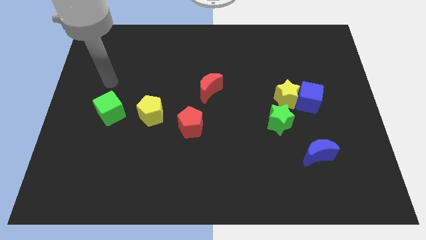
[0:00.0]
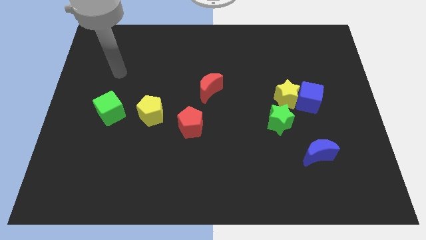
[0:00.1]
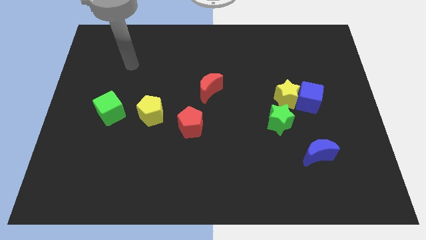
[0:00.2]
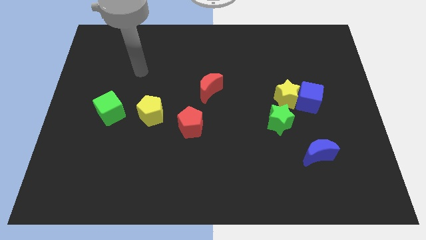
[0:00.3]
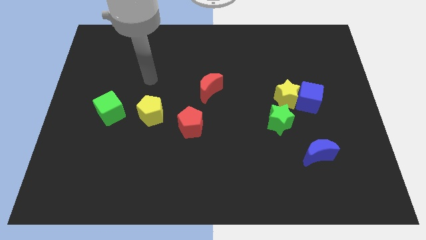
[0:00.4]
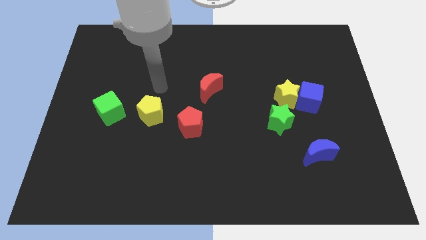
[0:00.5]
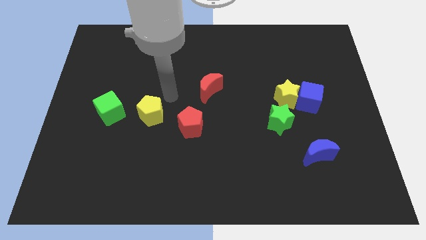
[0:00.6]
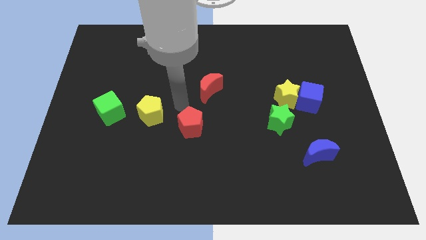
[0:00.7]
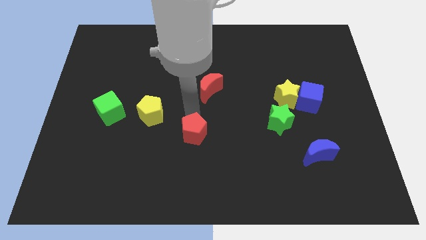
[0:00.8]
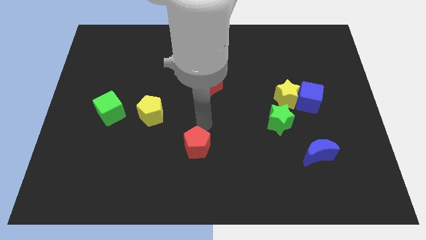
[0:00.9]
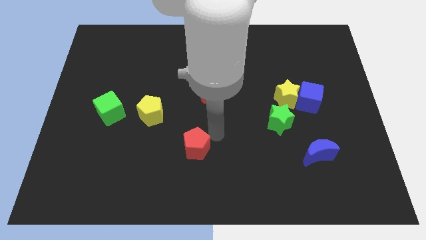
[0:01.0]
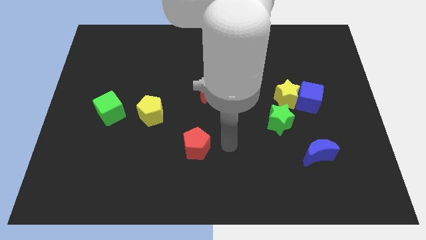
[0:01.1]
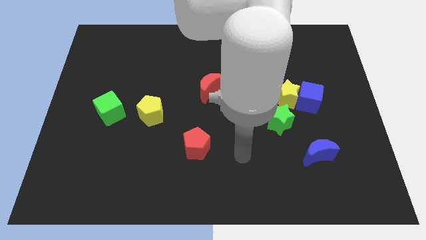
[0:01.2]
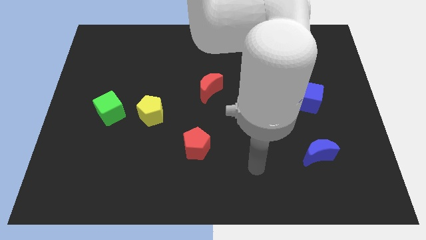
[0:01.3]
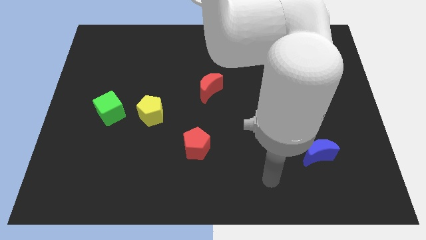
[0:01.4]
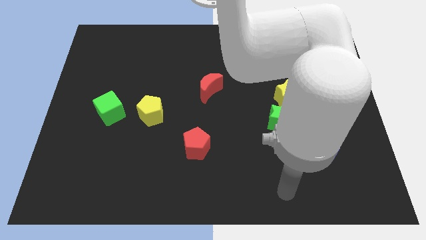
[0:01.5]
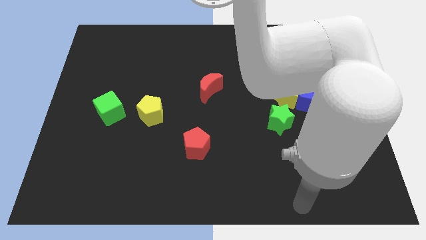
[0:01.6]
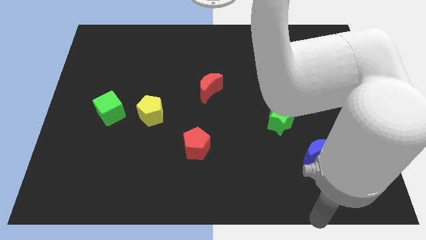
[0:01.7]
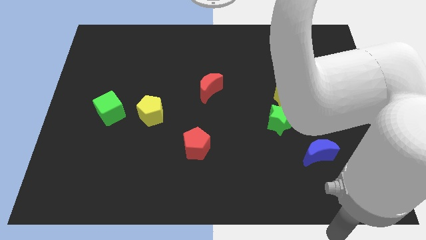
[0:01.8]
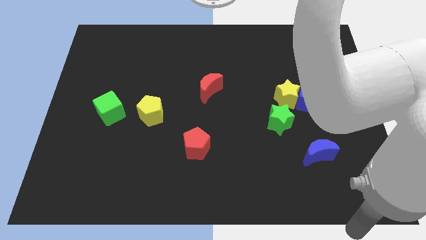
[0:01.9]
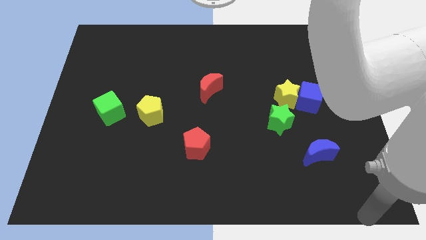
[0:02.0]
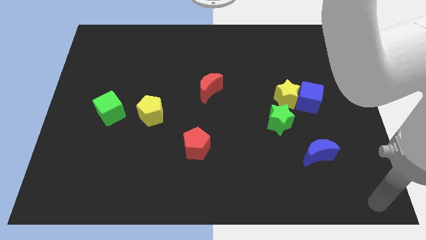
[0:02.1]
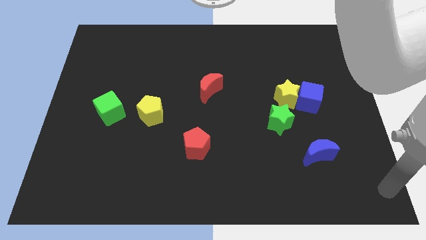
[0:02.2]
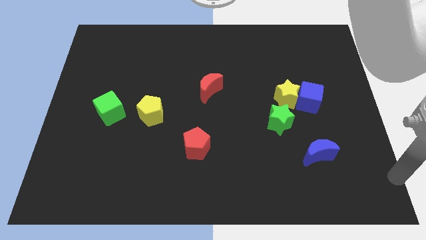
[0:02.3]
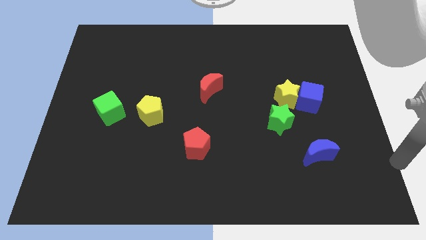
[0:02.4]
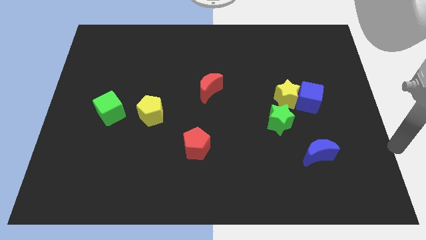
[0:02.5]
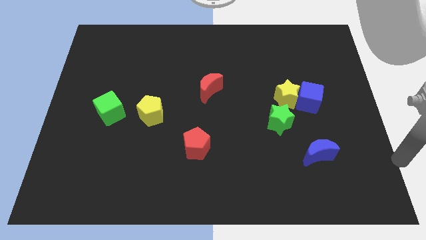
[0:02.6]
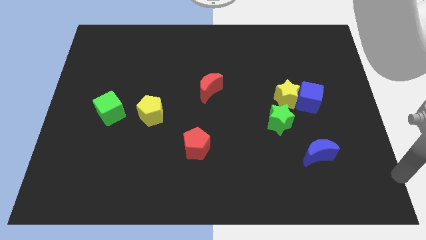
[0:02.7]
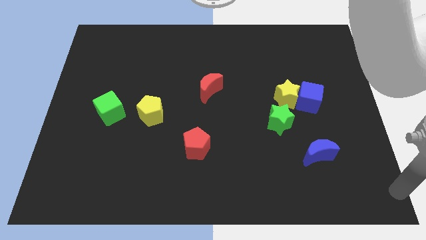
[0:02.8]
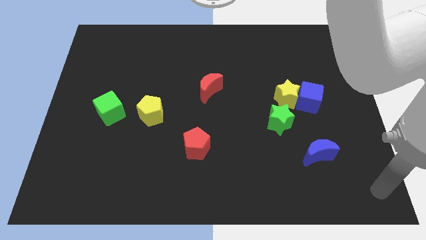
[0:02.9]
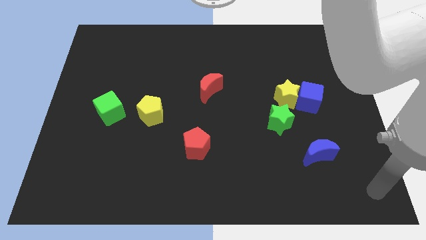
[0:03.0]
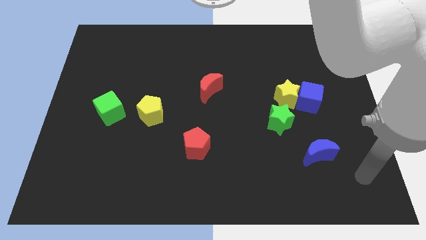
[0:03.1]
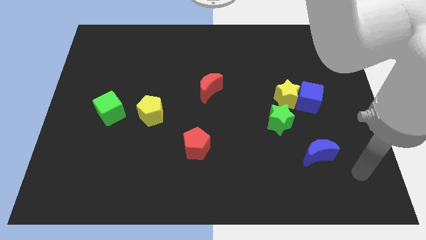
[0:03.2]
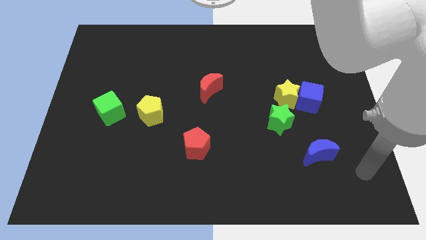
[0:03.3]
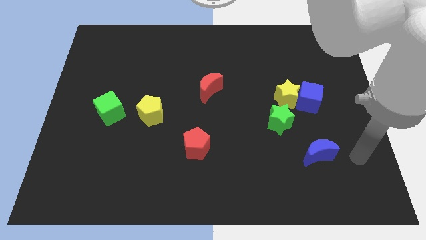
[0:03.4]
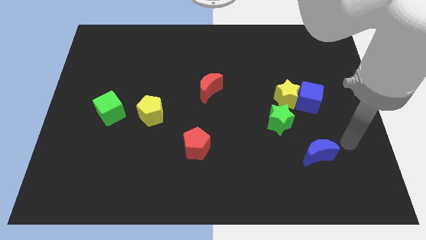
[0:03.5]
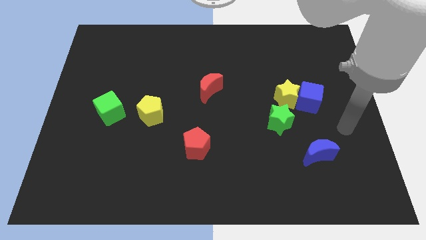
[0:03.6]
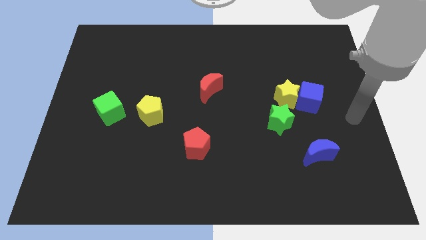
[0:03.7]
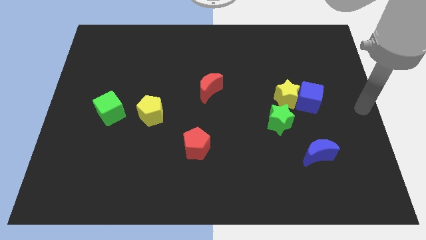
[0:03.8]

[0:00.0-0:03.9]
slightly move the red pentagon to the bottom of the board

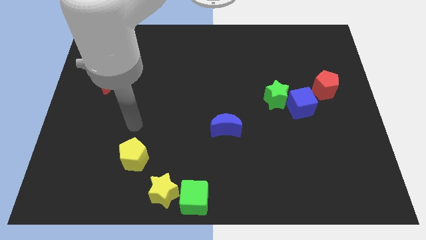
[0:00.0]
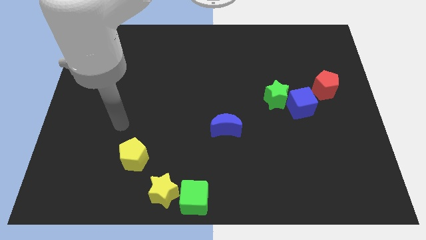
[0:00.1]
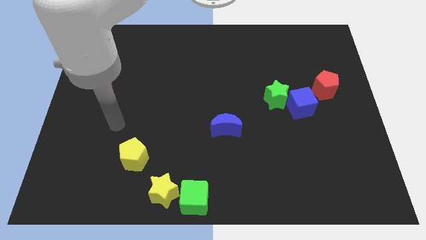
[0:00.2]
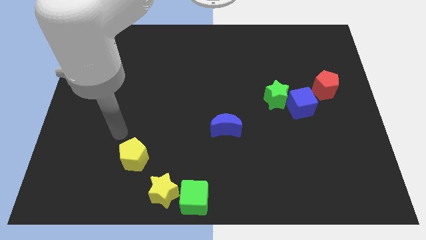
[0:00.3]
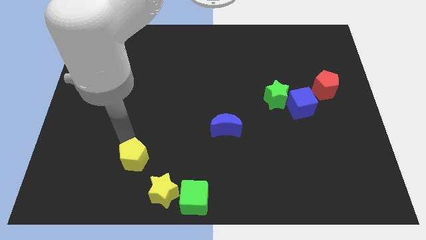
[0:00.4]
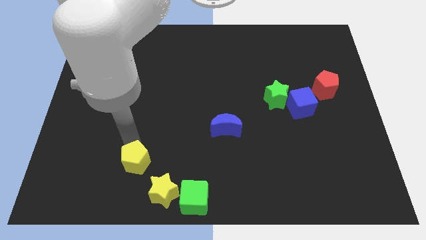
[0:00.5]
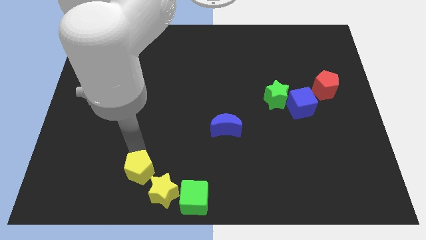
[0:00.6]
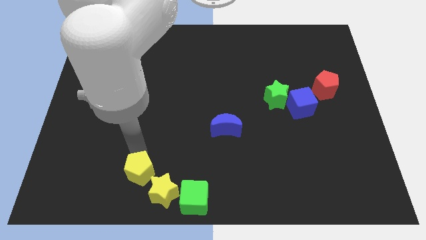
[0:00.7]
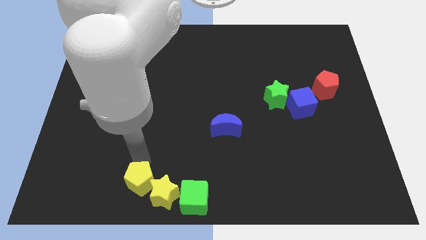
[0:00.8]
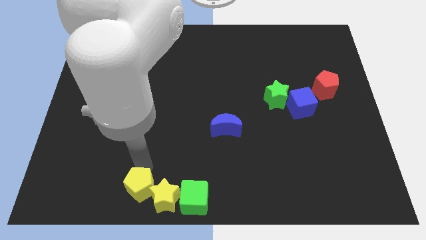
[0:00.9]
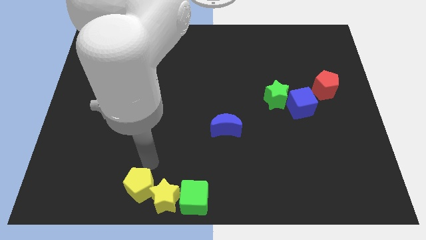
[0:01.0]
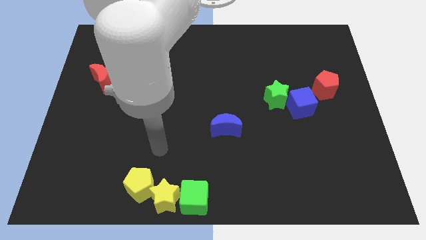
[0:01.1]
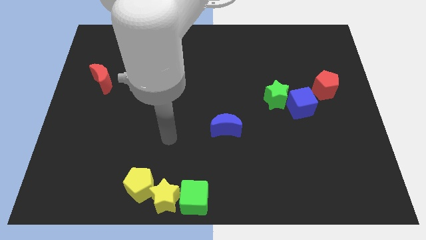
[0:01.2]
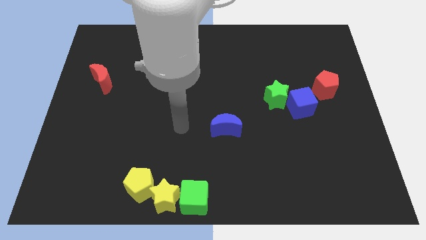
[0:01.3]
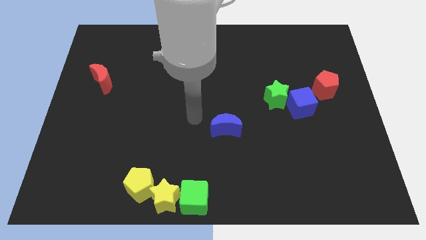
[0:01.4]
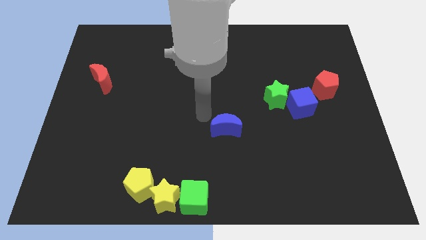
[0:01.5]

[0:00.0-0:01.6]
move the yellow pentagon to the top left side of the yellow star

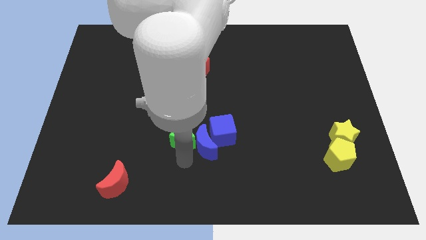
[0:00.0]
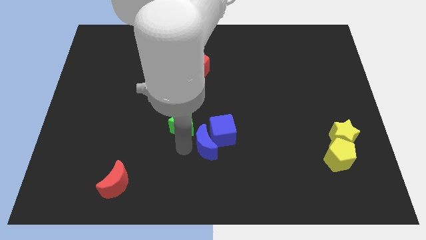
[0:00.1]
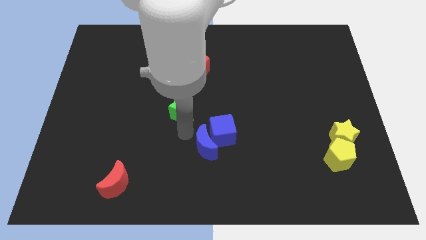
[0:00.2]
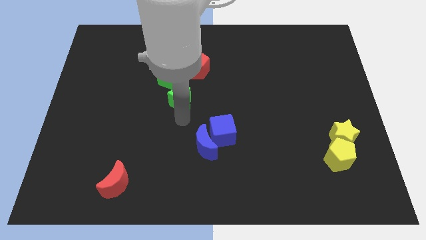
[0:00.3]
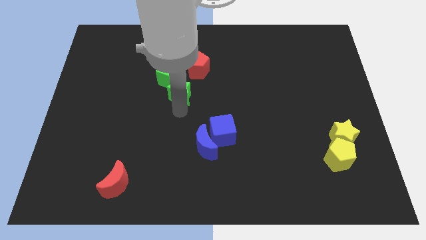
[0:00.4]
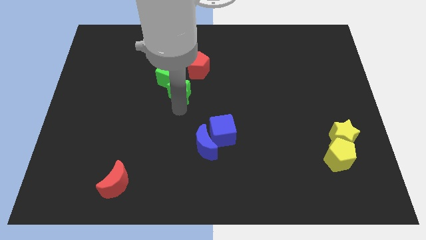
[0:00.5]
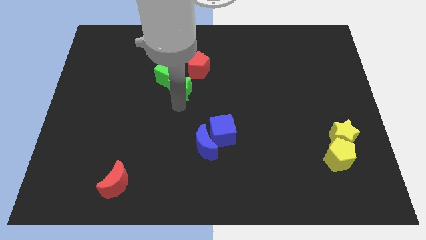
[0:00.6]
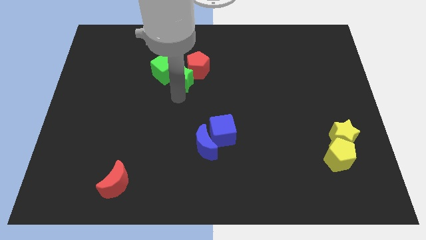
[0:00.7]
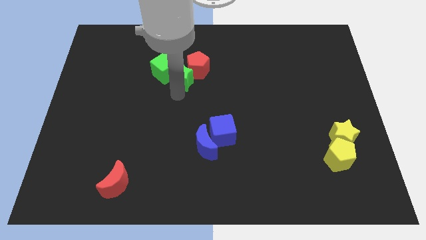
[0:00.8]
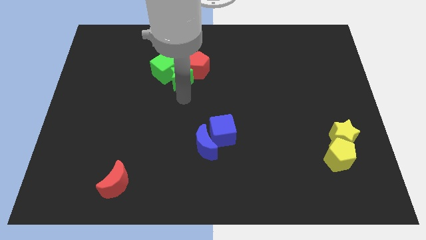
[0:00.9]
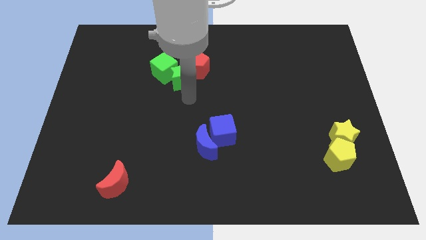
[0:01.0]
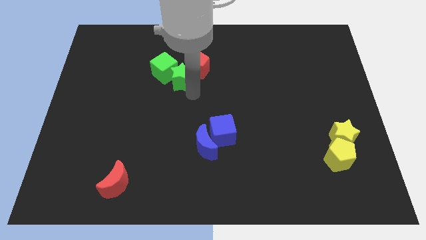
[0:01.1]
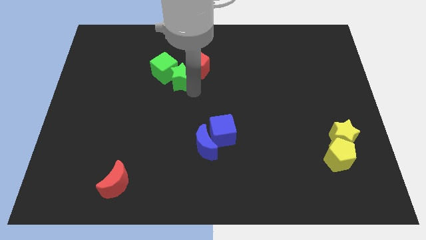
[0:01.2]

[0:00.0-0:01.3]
push the green star into the green cube

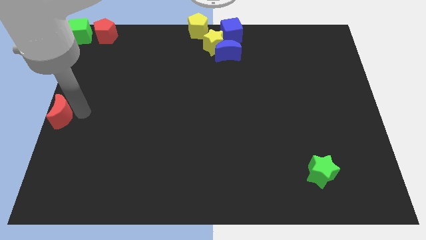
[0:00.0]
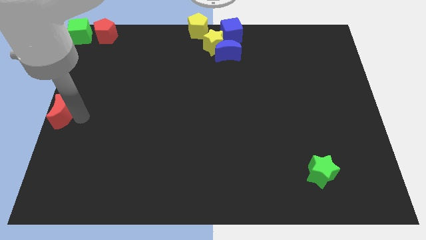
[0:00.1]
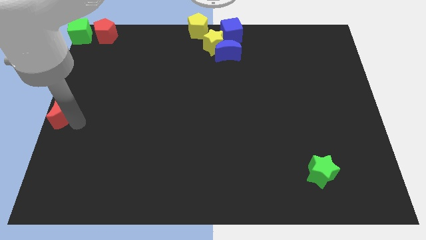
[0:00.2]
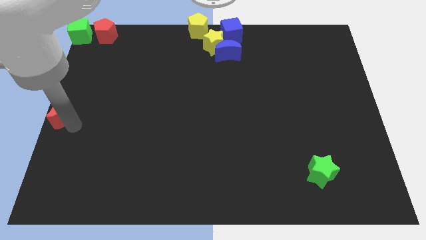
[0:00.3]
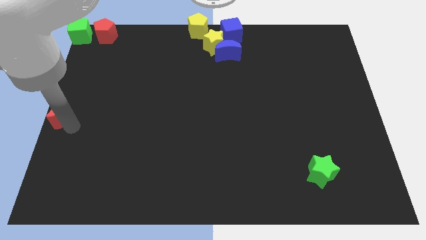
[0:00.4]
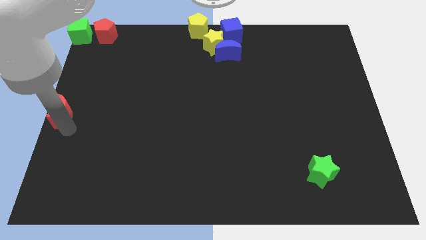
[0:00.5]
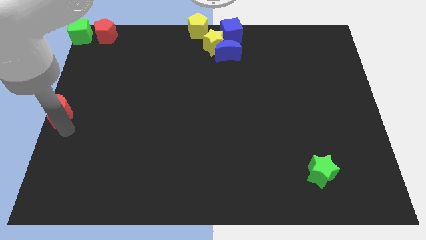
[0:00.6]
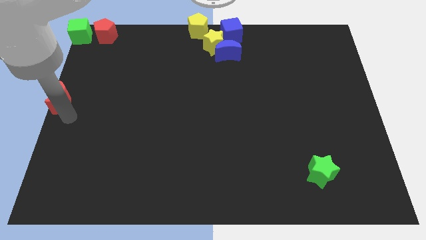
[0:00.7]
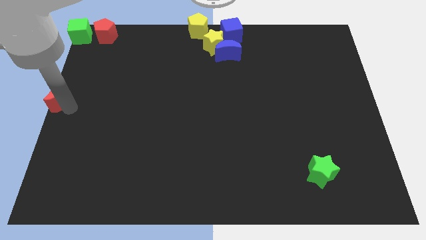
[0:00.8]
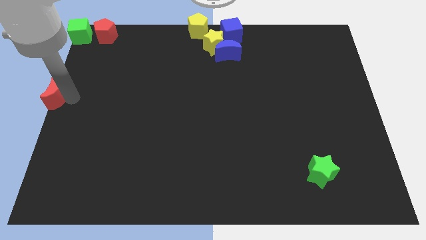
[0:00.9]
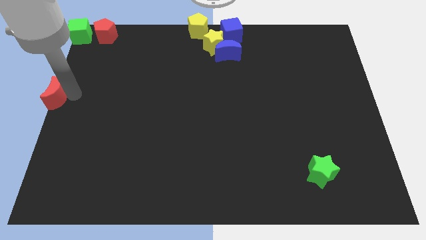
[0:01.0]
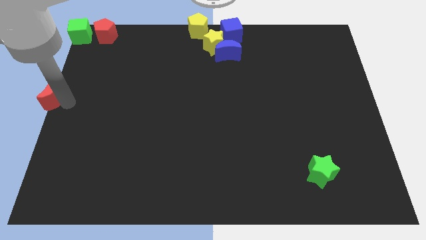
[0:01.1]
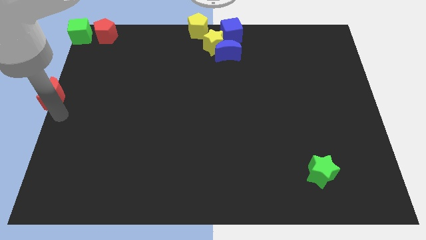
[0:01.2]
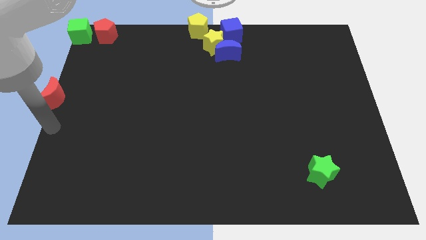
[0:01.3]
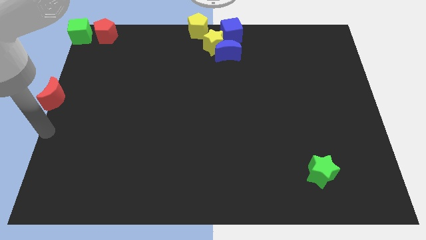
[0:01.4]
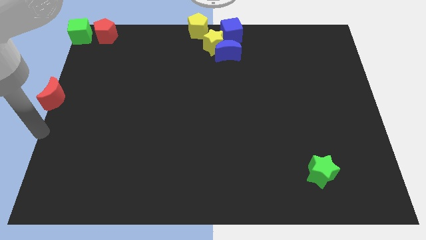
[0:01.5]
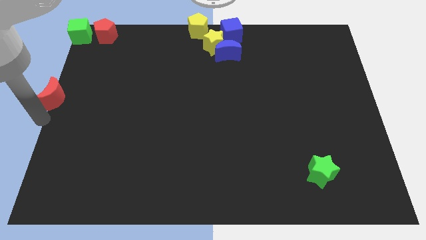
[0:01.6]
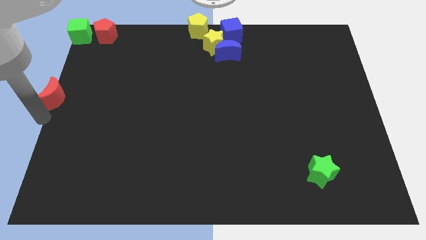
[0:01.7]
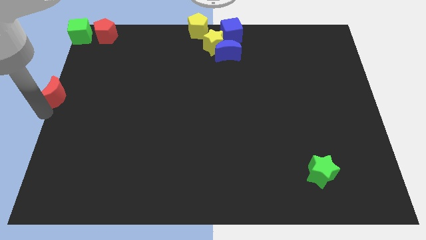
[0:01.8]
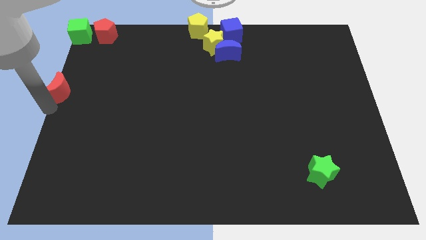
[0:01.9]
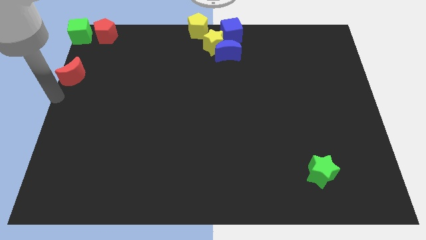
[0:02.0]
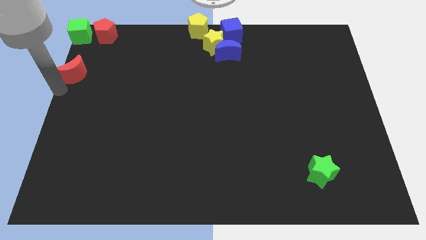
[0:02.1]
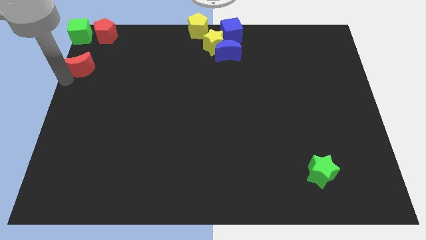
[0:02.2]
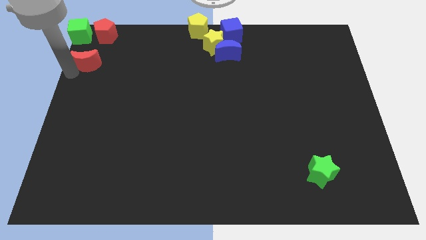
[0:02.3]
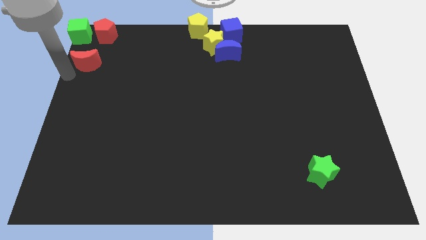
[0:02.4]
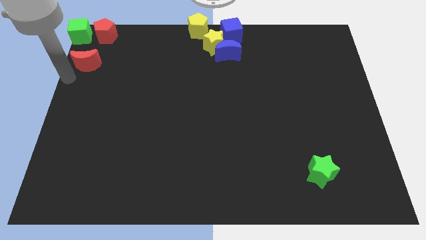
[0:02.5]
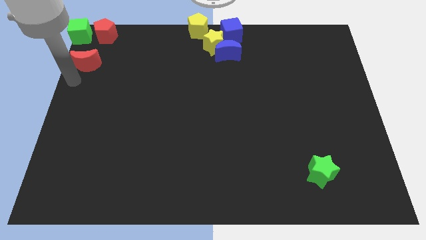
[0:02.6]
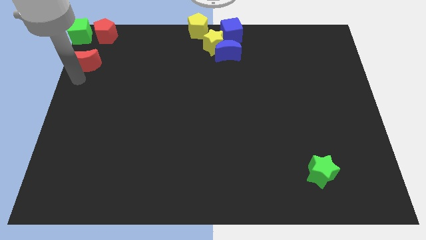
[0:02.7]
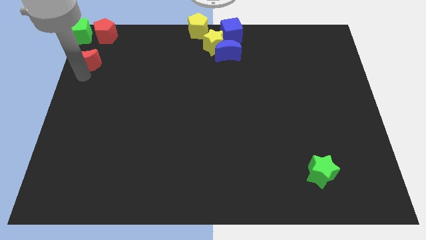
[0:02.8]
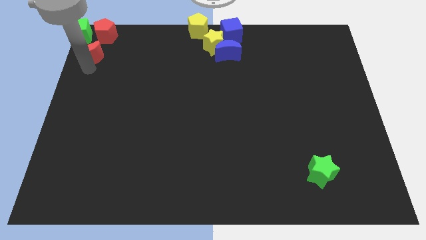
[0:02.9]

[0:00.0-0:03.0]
push red crescent towards up
